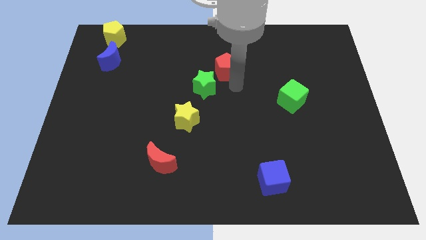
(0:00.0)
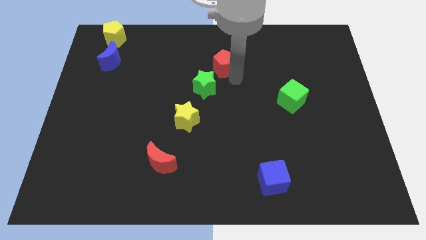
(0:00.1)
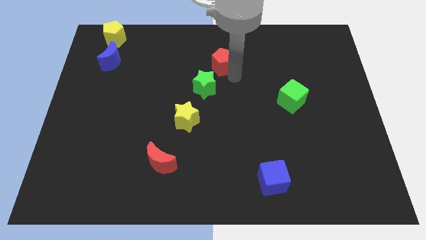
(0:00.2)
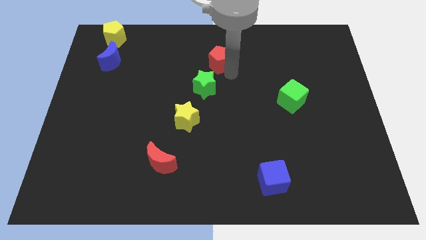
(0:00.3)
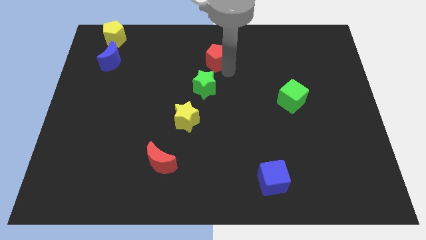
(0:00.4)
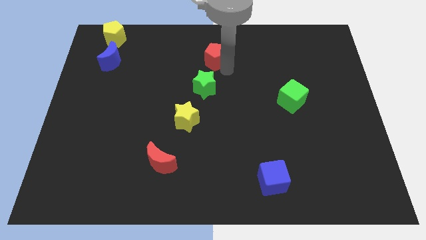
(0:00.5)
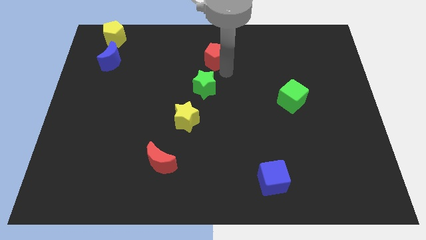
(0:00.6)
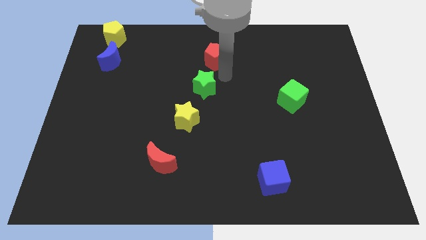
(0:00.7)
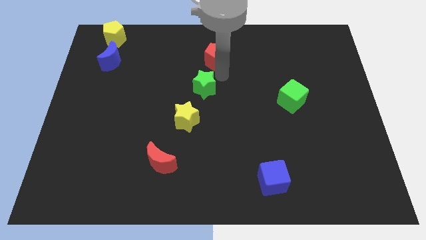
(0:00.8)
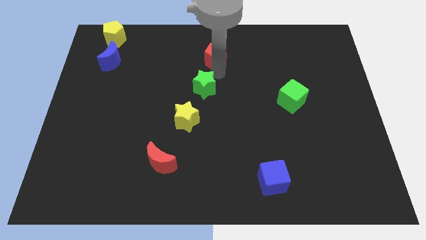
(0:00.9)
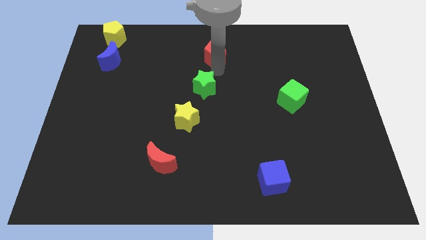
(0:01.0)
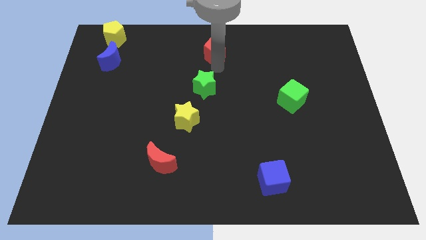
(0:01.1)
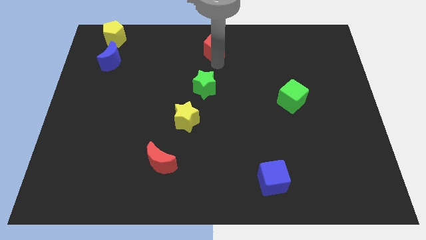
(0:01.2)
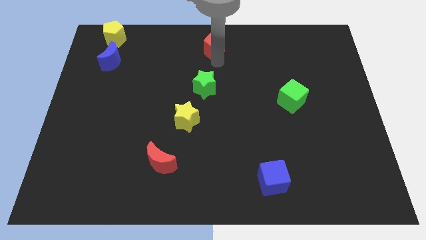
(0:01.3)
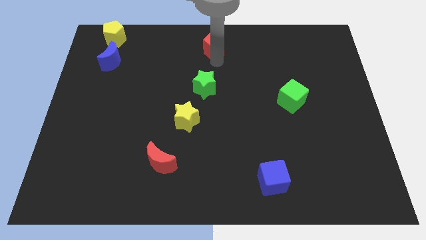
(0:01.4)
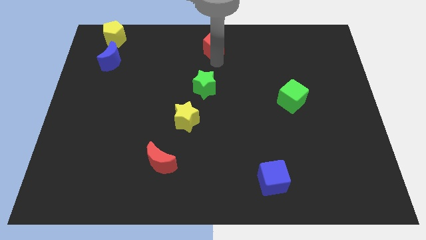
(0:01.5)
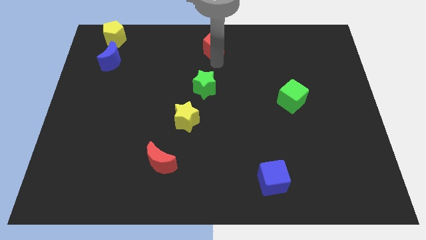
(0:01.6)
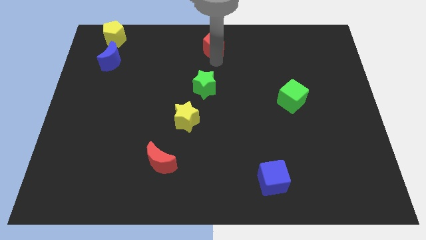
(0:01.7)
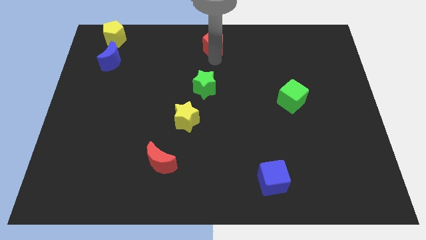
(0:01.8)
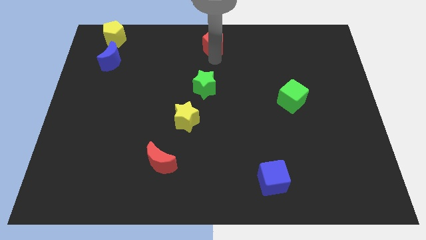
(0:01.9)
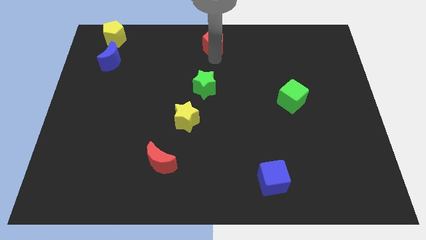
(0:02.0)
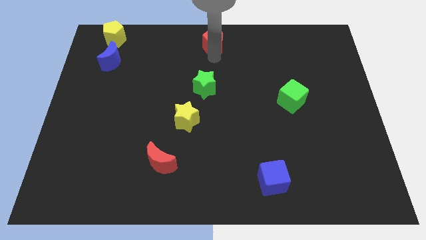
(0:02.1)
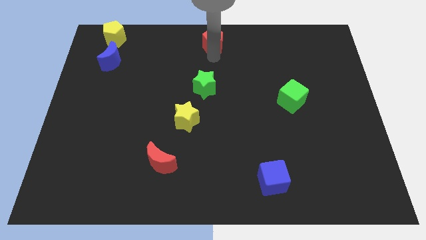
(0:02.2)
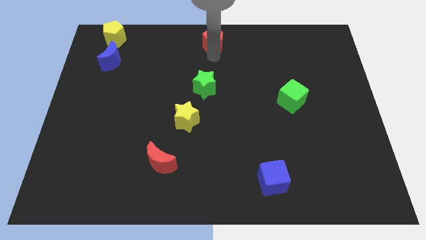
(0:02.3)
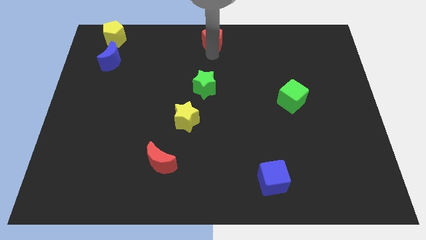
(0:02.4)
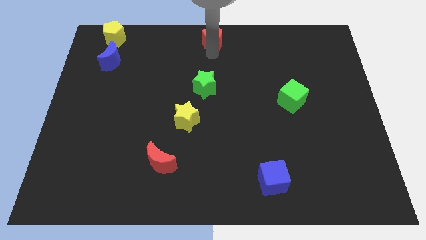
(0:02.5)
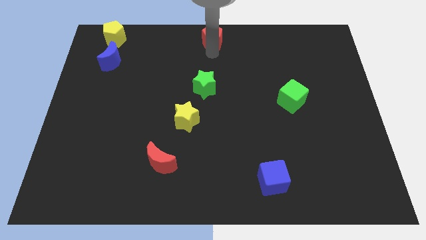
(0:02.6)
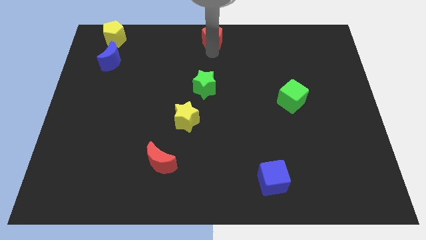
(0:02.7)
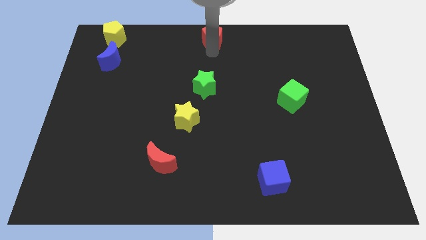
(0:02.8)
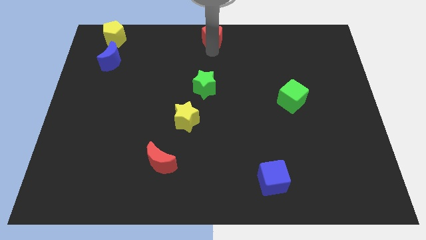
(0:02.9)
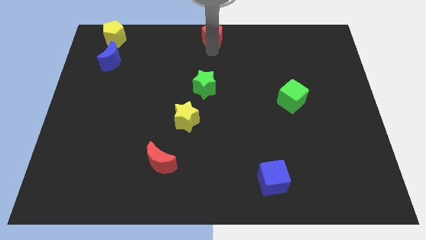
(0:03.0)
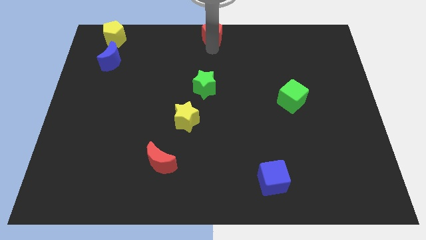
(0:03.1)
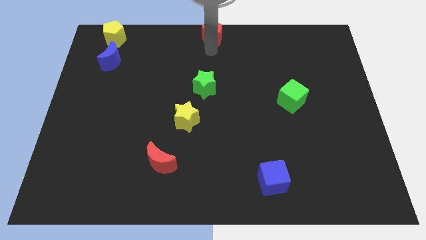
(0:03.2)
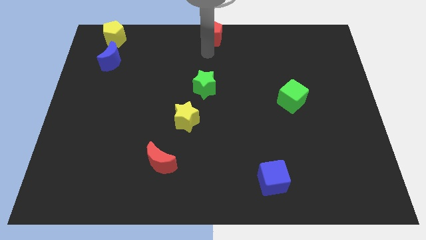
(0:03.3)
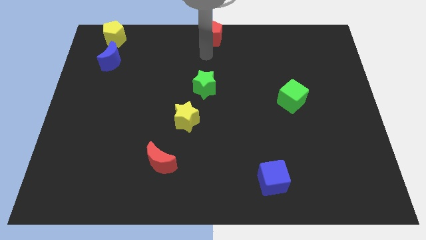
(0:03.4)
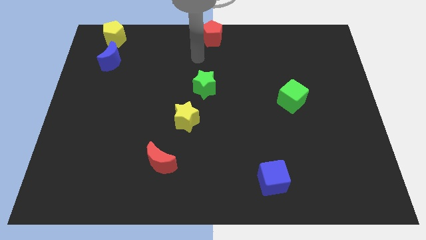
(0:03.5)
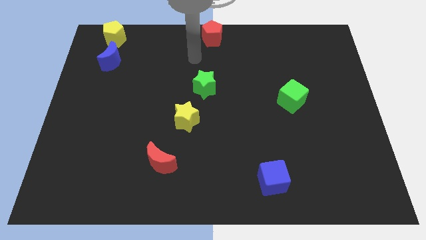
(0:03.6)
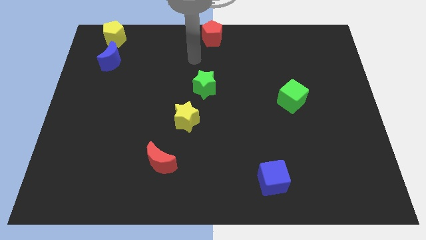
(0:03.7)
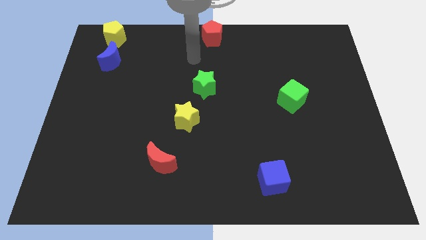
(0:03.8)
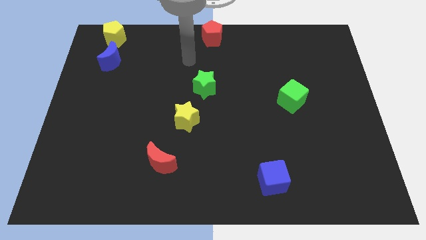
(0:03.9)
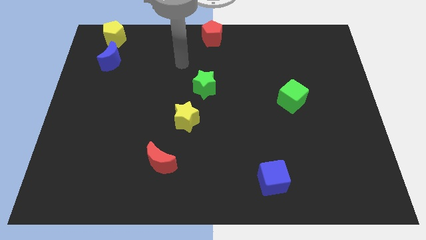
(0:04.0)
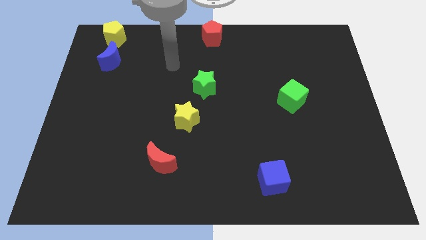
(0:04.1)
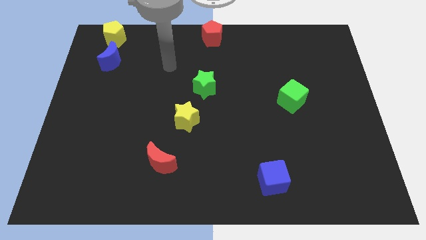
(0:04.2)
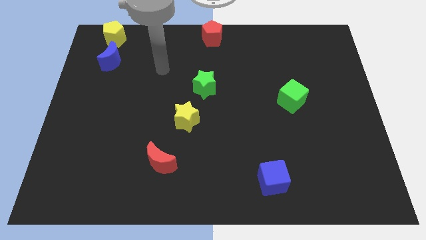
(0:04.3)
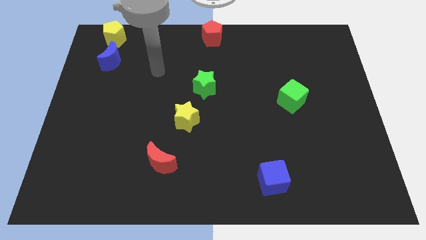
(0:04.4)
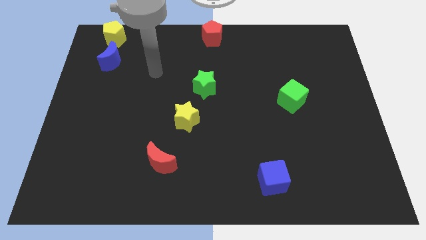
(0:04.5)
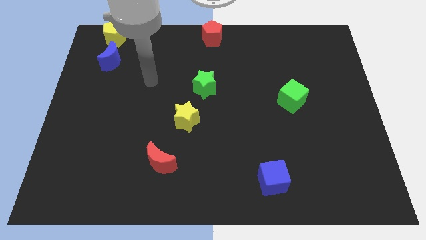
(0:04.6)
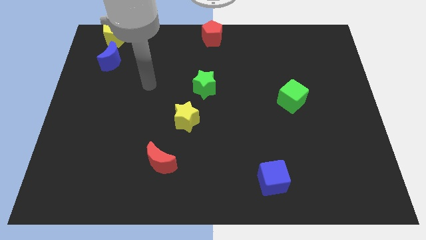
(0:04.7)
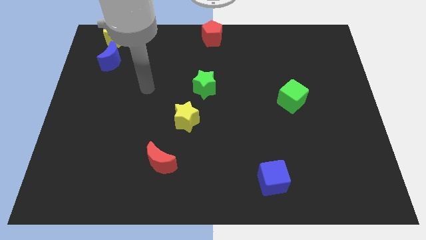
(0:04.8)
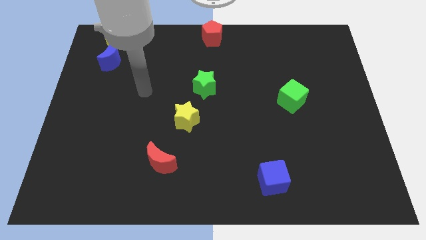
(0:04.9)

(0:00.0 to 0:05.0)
push the red pentagon to the top center of the board

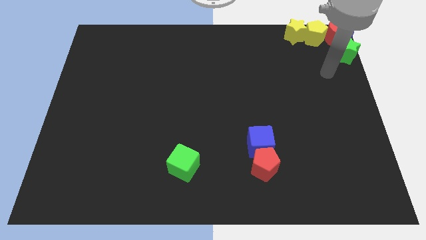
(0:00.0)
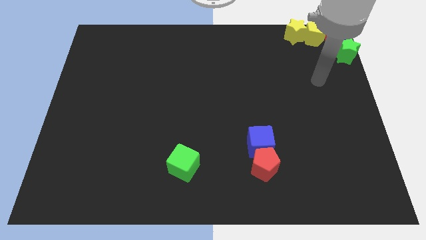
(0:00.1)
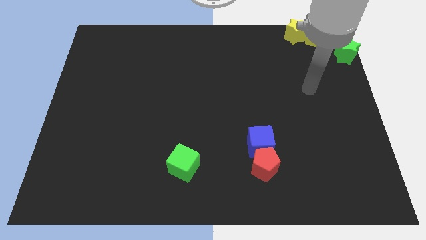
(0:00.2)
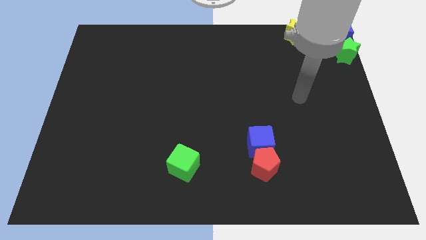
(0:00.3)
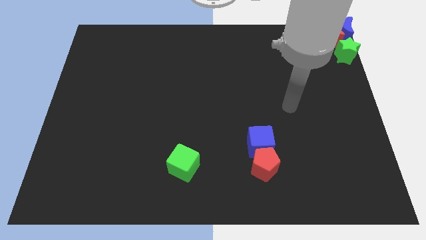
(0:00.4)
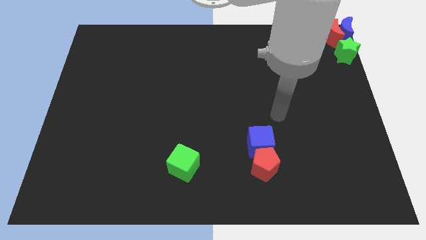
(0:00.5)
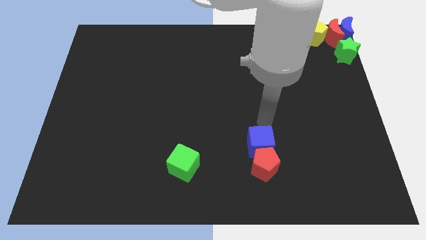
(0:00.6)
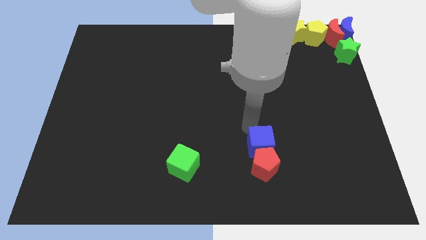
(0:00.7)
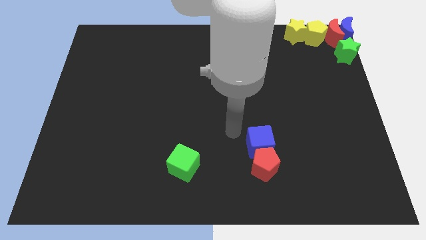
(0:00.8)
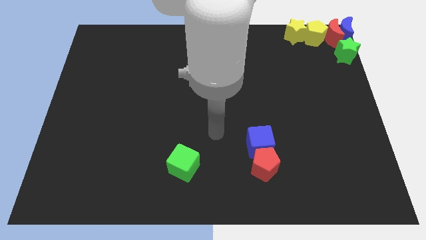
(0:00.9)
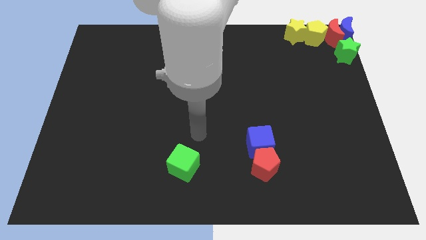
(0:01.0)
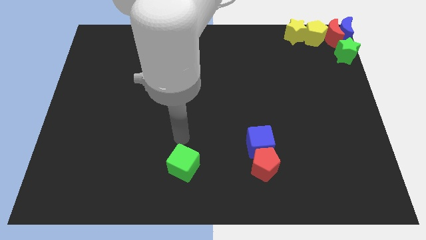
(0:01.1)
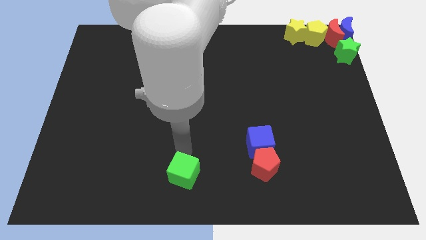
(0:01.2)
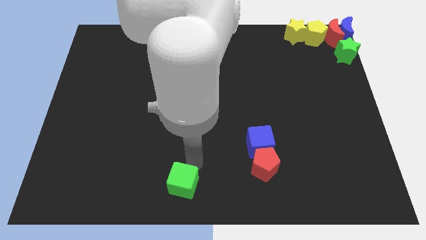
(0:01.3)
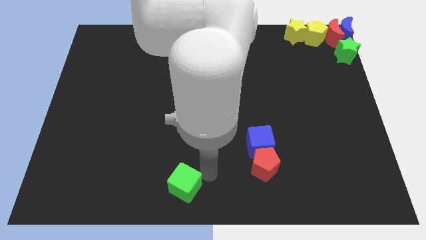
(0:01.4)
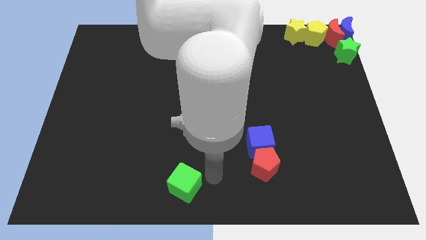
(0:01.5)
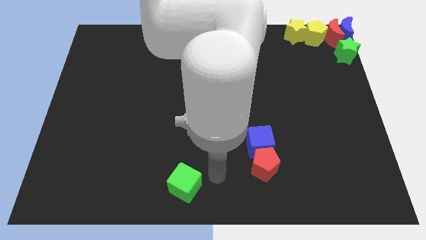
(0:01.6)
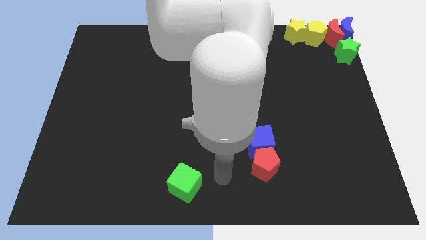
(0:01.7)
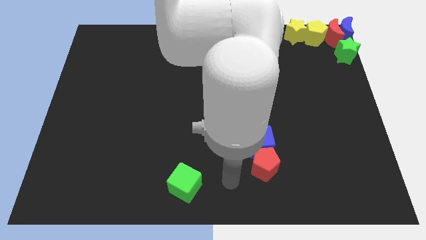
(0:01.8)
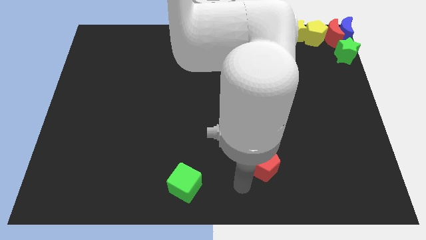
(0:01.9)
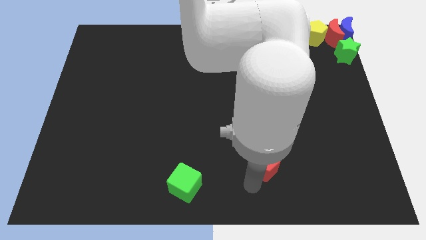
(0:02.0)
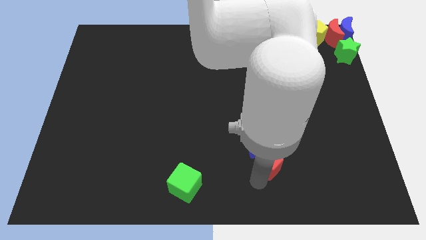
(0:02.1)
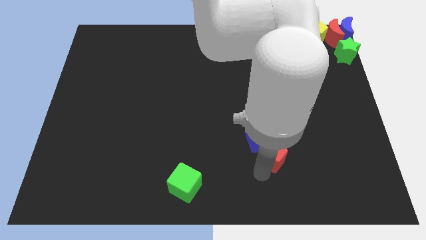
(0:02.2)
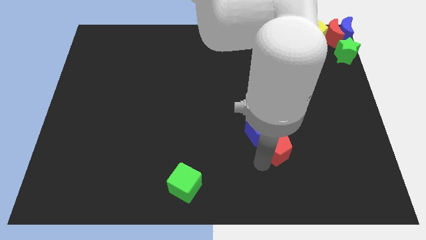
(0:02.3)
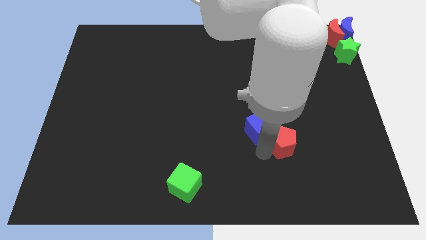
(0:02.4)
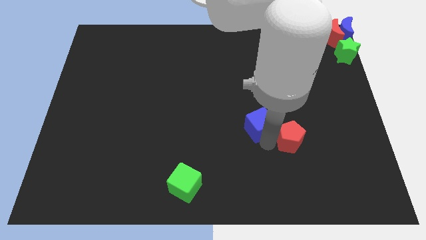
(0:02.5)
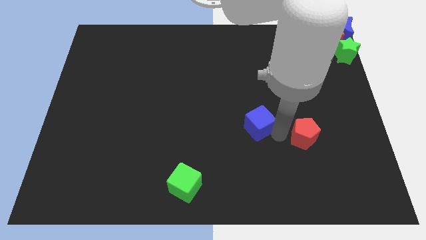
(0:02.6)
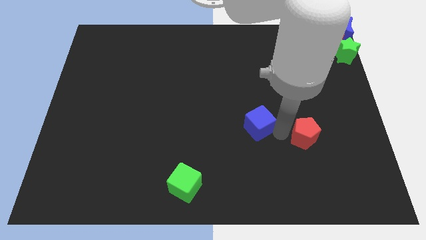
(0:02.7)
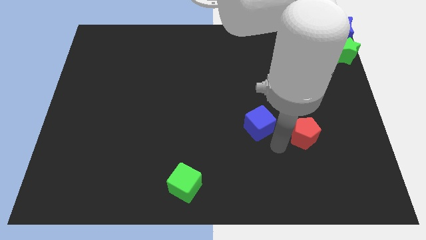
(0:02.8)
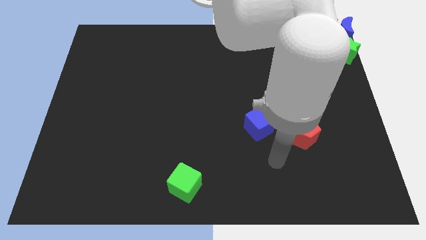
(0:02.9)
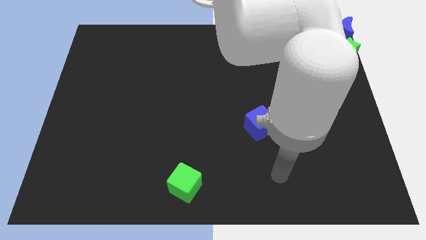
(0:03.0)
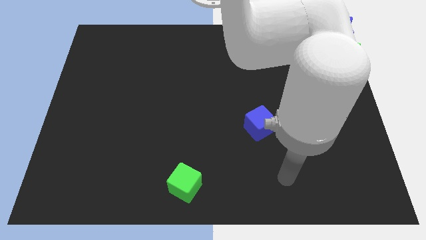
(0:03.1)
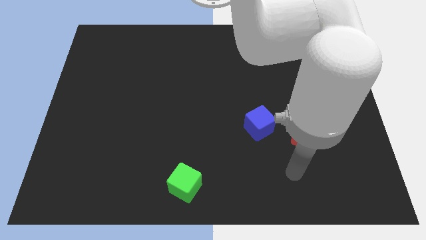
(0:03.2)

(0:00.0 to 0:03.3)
separate the blue cube and the red pentagon

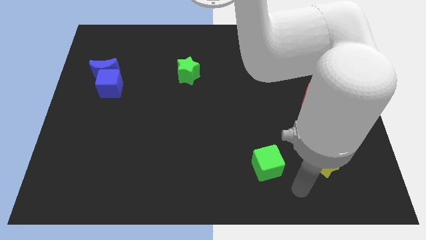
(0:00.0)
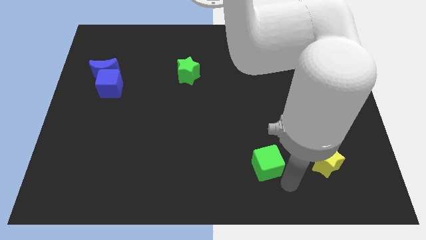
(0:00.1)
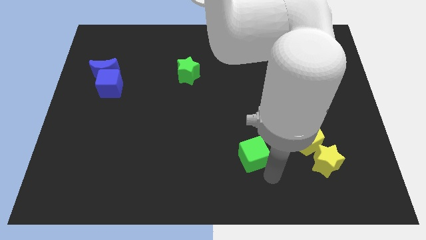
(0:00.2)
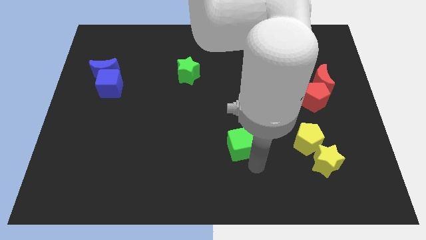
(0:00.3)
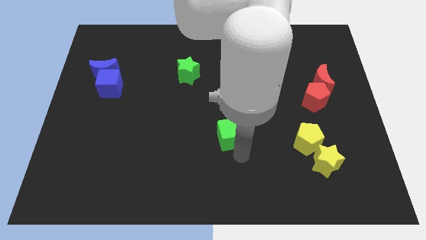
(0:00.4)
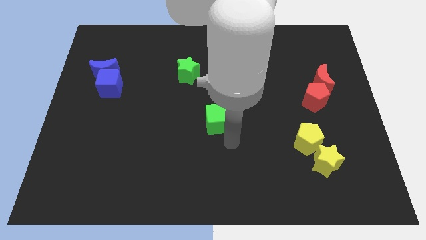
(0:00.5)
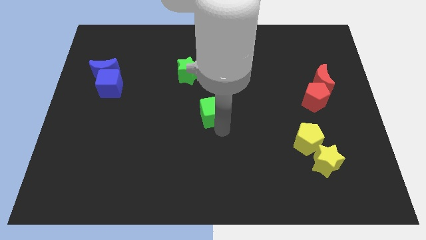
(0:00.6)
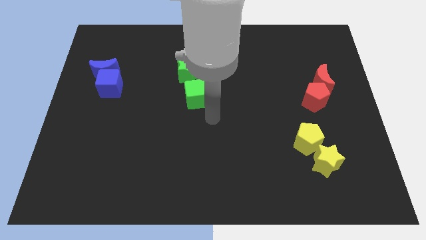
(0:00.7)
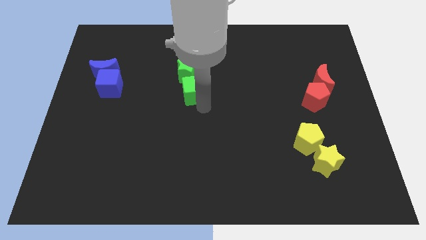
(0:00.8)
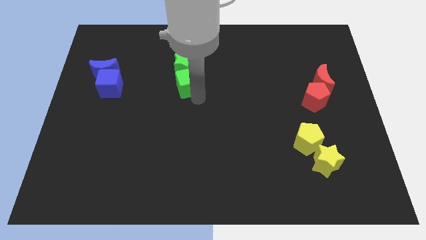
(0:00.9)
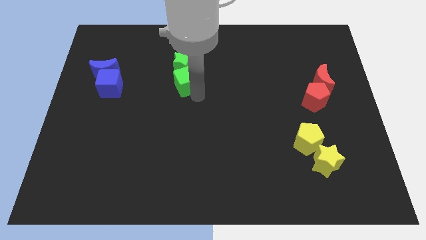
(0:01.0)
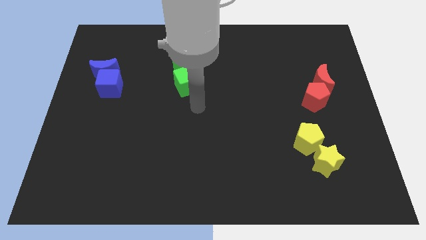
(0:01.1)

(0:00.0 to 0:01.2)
push the green cube into the bottom side of the green star
